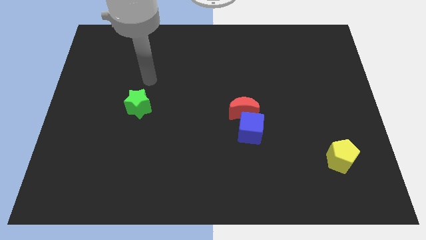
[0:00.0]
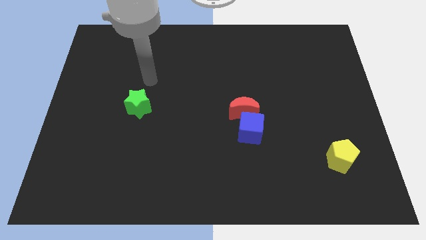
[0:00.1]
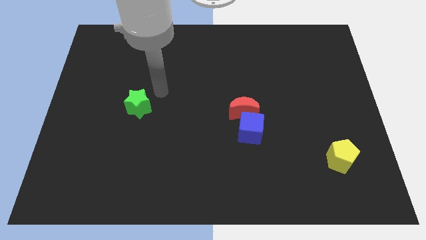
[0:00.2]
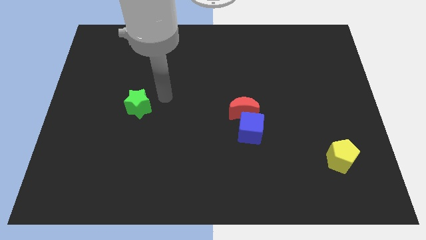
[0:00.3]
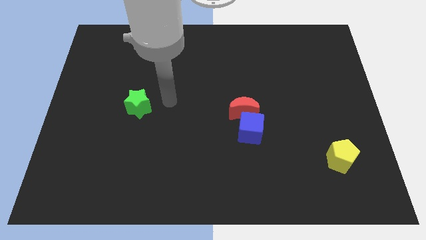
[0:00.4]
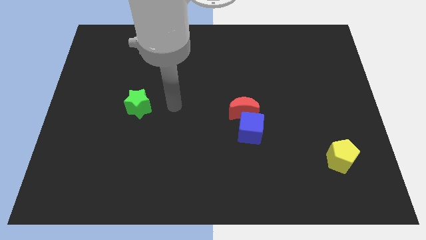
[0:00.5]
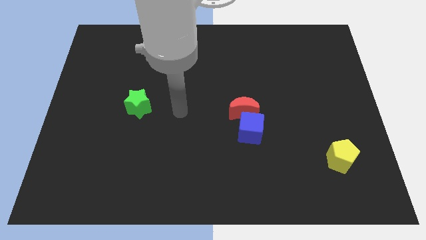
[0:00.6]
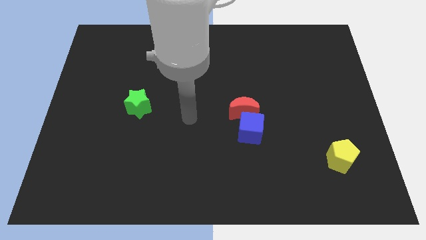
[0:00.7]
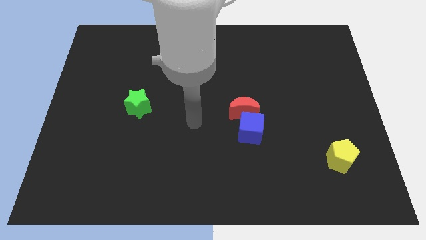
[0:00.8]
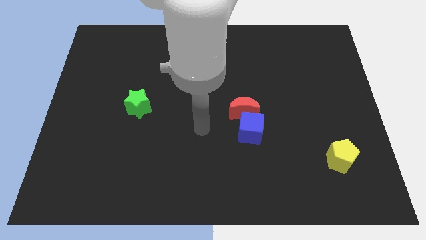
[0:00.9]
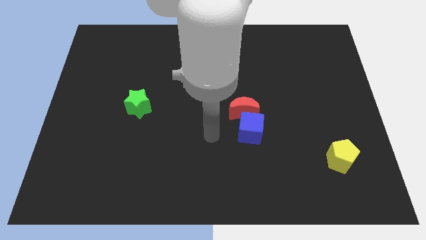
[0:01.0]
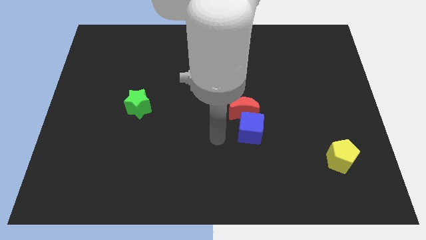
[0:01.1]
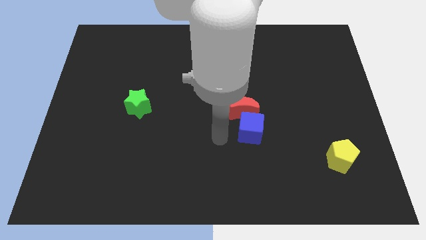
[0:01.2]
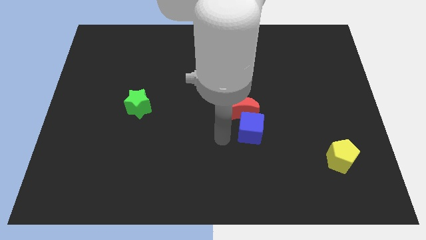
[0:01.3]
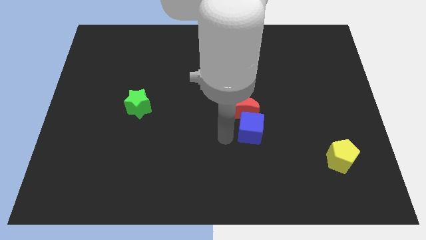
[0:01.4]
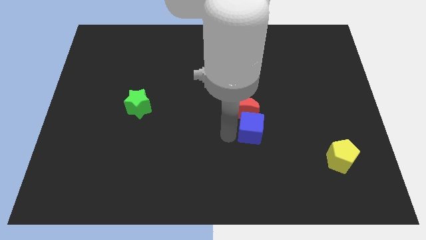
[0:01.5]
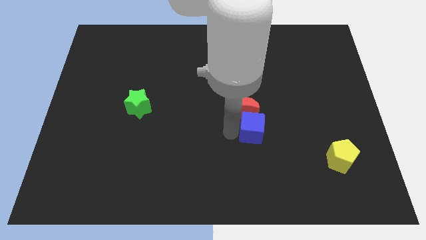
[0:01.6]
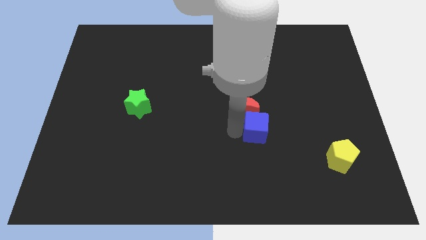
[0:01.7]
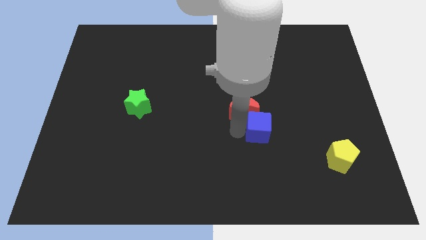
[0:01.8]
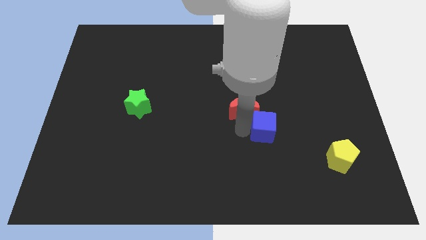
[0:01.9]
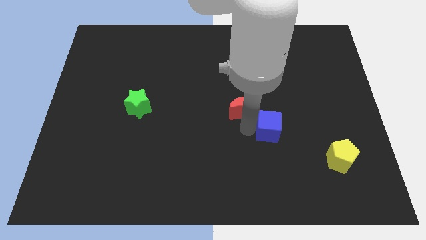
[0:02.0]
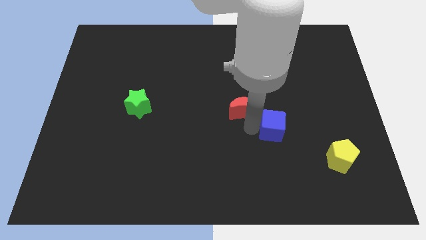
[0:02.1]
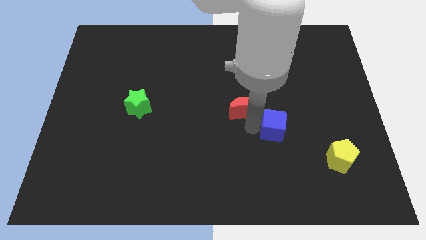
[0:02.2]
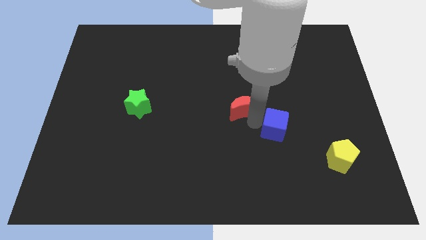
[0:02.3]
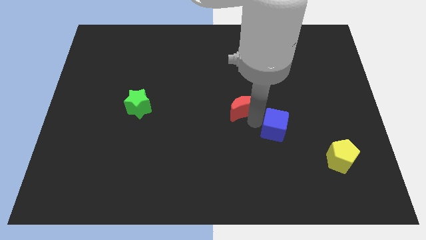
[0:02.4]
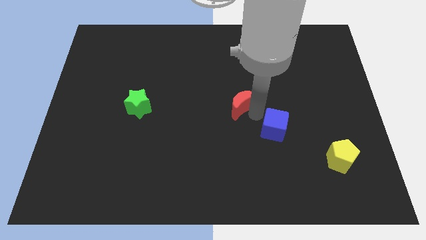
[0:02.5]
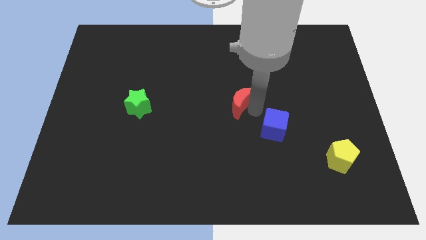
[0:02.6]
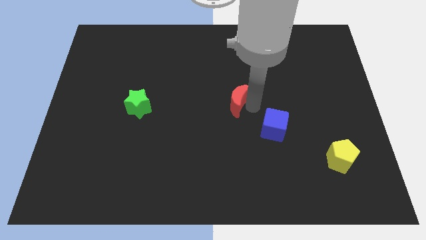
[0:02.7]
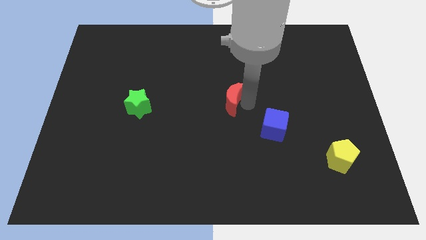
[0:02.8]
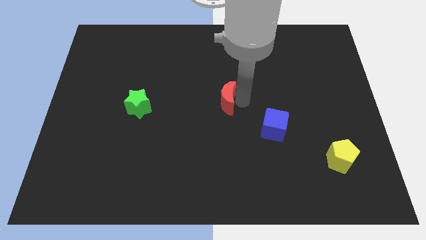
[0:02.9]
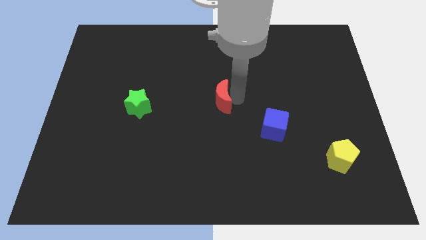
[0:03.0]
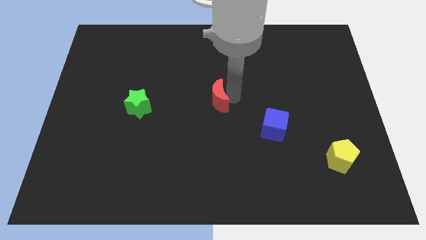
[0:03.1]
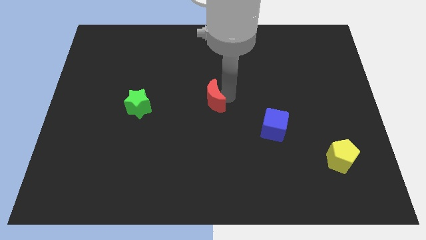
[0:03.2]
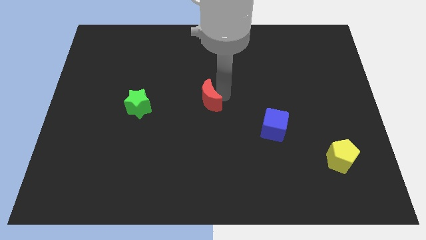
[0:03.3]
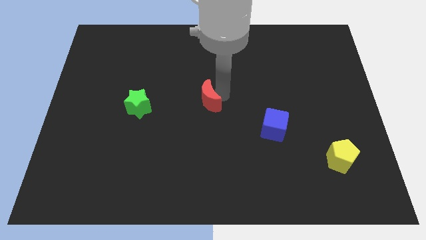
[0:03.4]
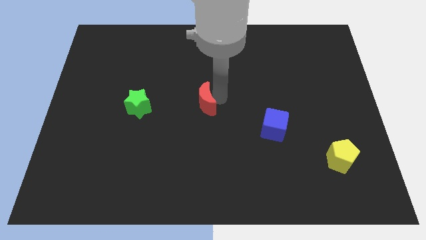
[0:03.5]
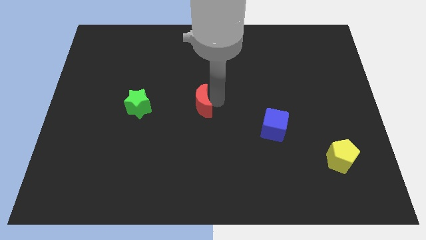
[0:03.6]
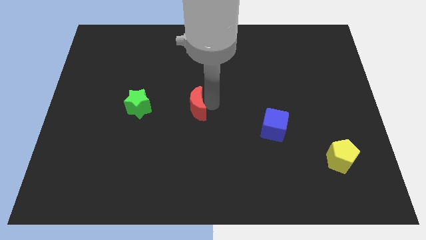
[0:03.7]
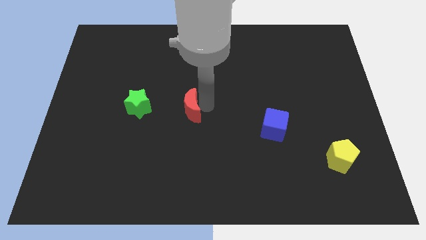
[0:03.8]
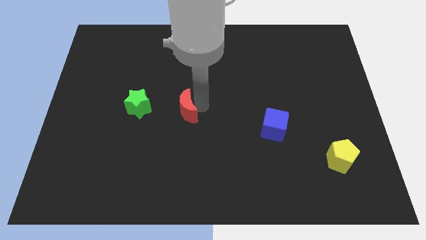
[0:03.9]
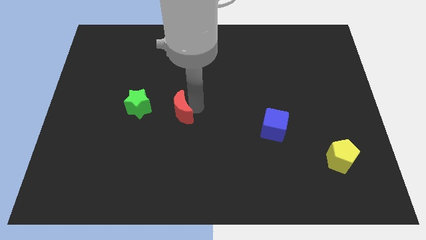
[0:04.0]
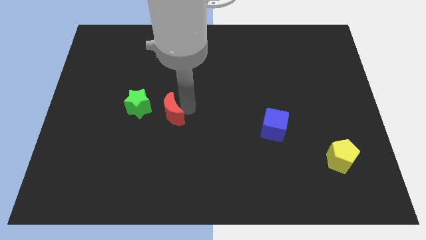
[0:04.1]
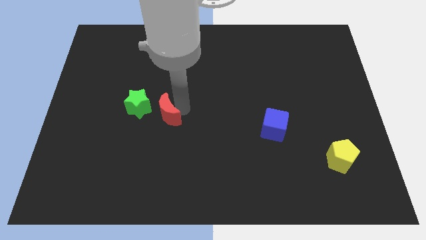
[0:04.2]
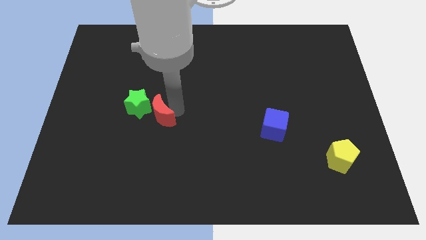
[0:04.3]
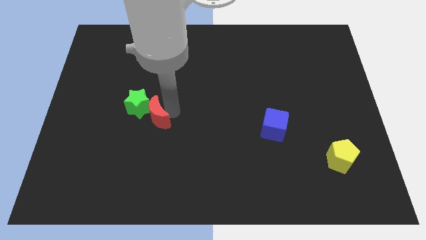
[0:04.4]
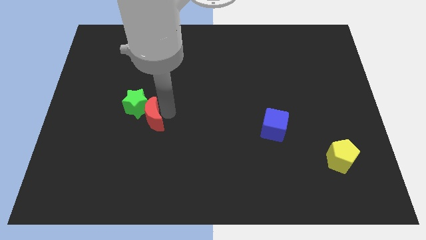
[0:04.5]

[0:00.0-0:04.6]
put the red moon close to the star

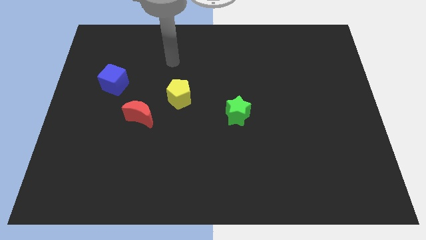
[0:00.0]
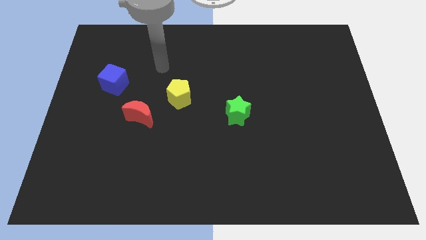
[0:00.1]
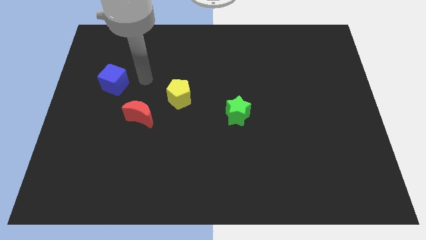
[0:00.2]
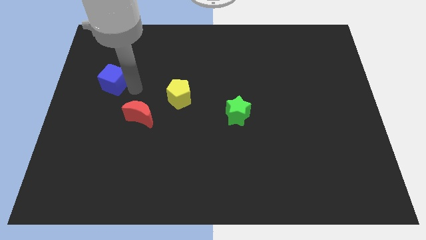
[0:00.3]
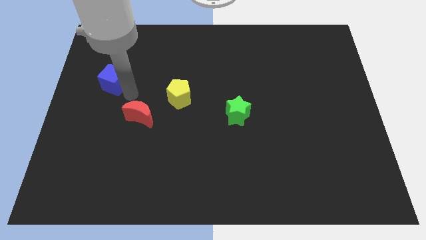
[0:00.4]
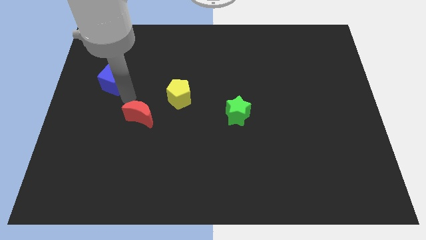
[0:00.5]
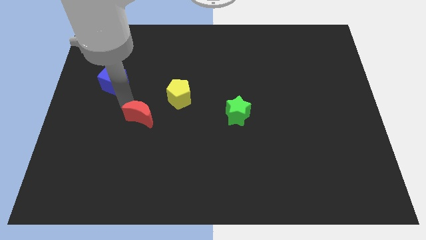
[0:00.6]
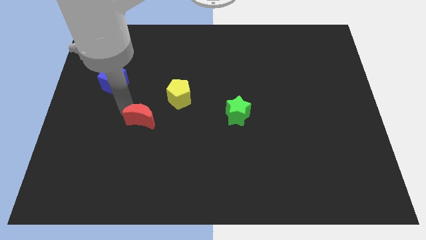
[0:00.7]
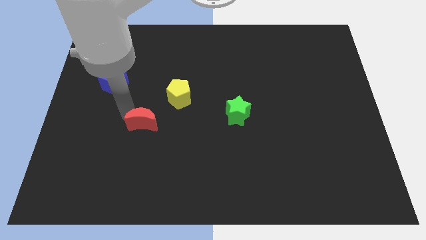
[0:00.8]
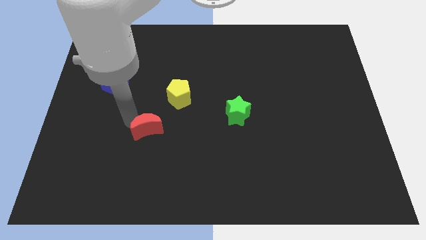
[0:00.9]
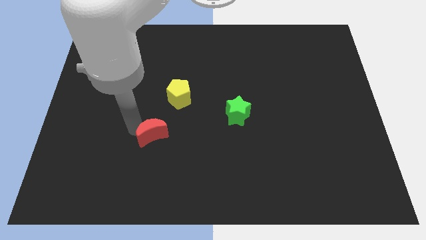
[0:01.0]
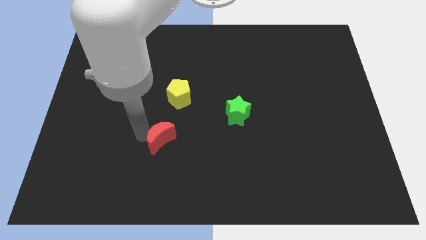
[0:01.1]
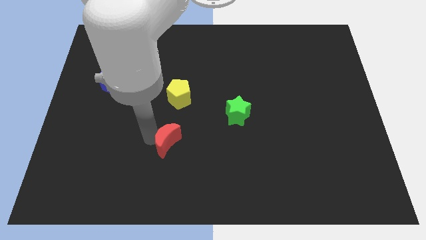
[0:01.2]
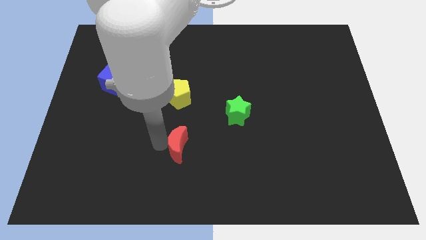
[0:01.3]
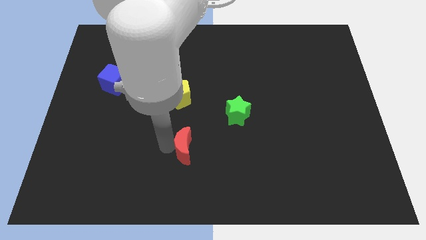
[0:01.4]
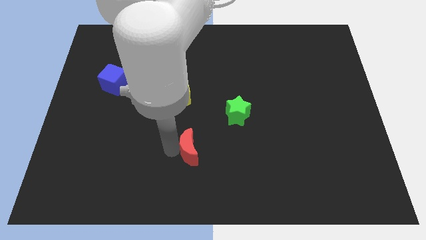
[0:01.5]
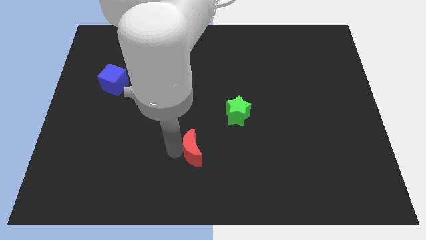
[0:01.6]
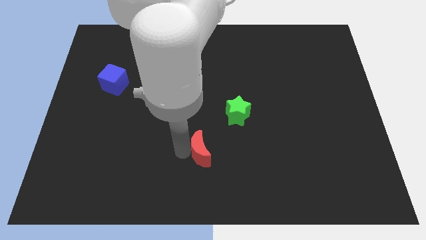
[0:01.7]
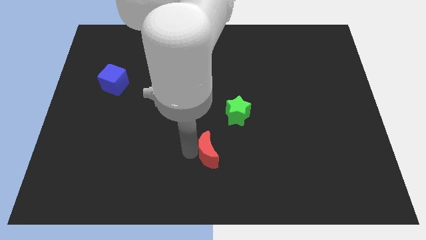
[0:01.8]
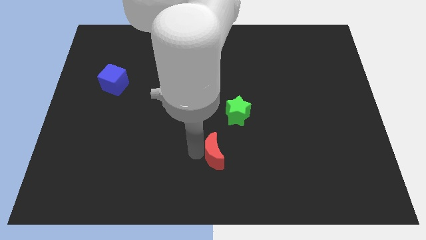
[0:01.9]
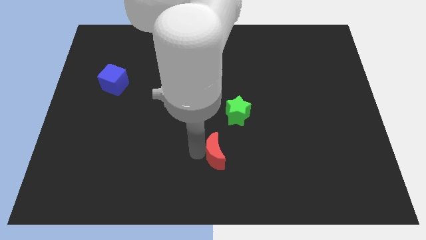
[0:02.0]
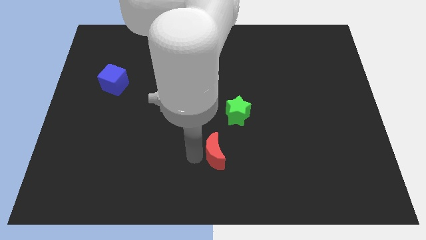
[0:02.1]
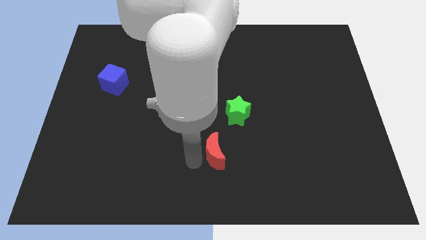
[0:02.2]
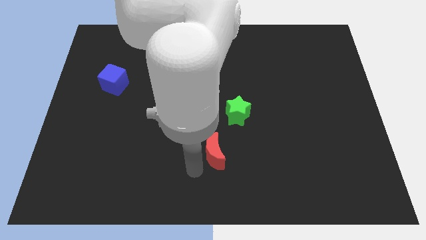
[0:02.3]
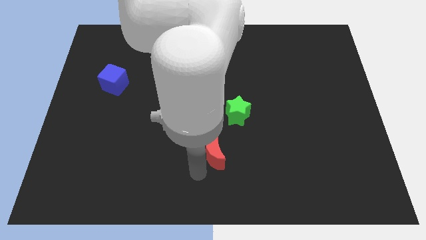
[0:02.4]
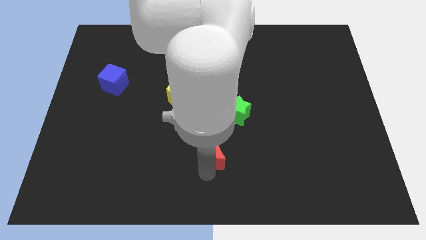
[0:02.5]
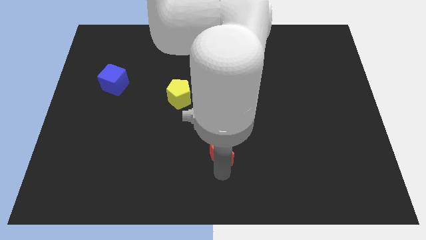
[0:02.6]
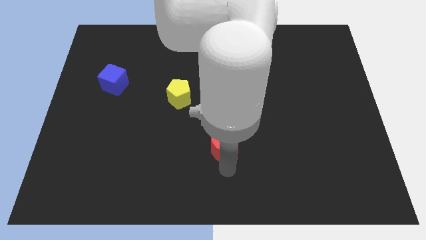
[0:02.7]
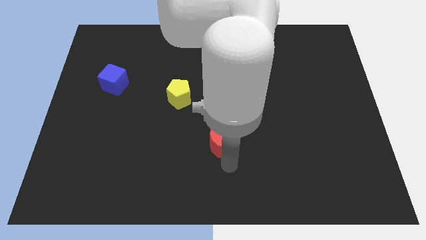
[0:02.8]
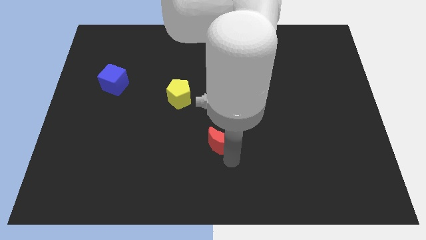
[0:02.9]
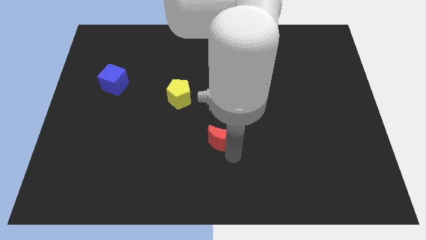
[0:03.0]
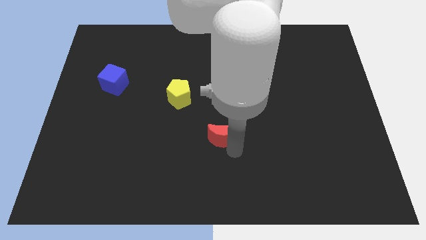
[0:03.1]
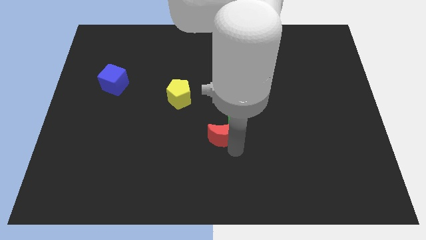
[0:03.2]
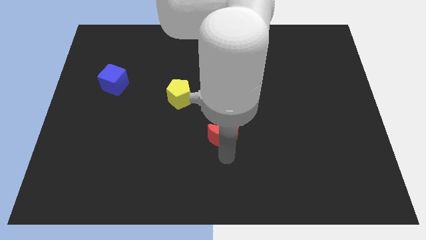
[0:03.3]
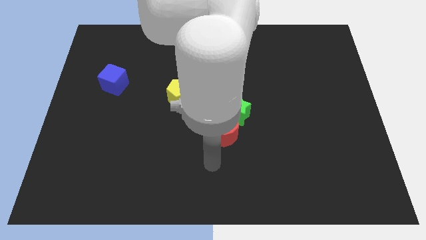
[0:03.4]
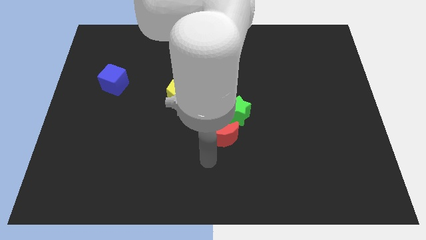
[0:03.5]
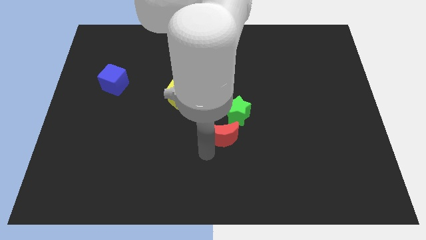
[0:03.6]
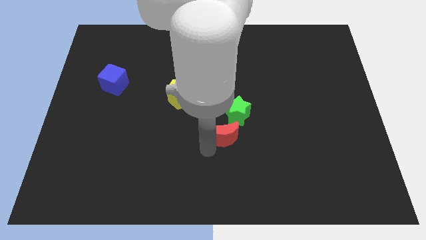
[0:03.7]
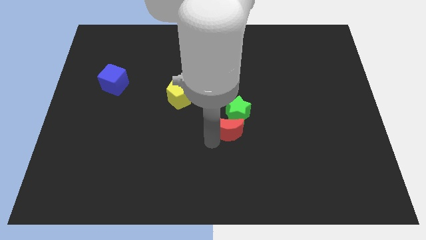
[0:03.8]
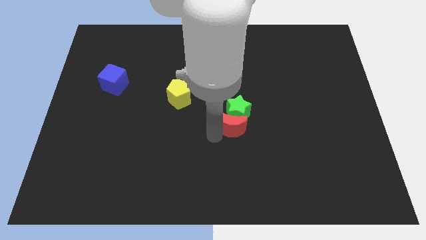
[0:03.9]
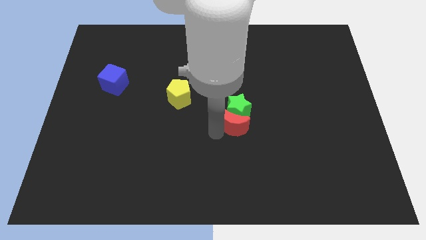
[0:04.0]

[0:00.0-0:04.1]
slide the moon next to the green block
